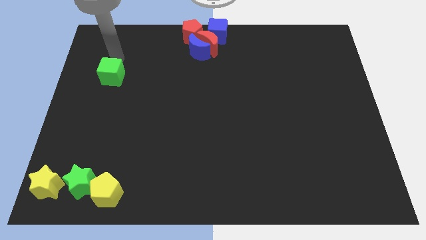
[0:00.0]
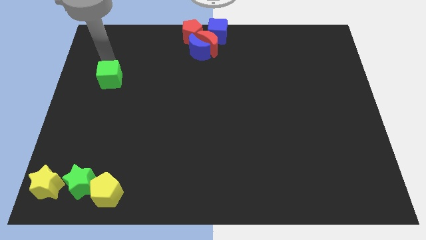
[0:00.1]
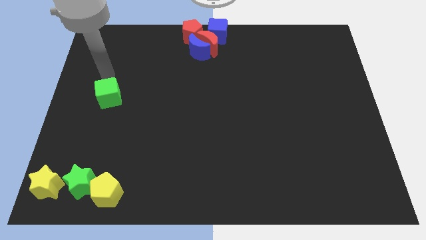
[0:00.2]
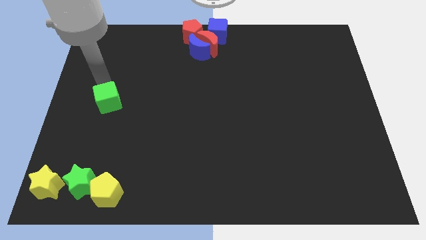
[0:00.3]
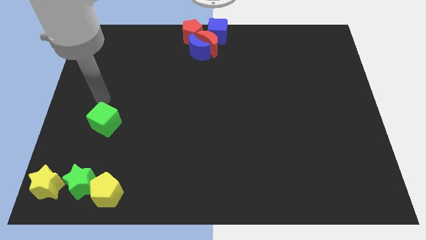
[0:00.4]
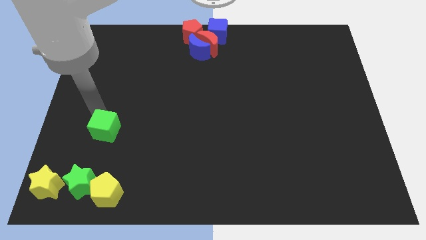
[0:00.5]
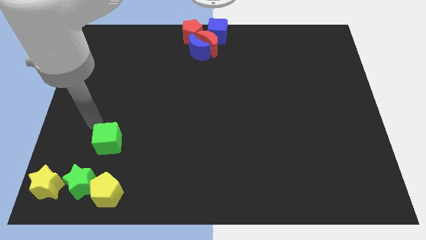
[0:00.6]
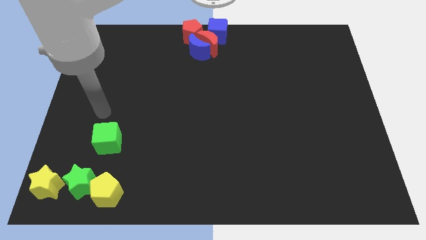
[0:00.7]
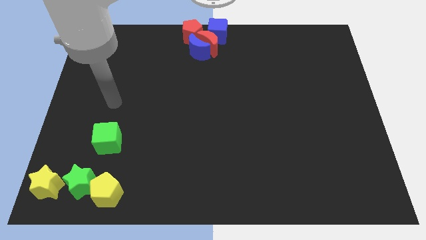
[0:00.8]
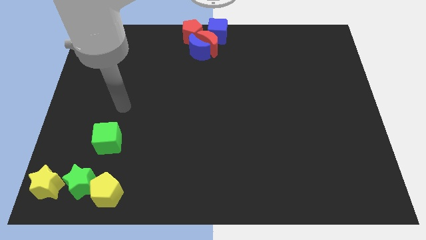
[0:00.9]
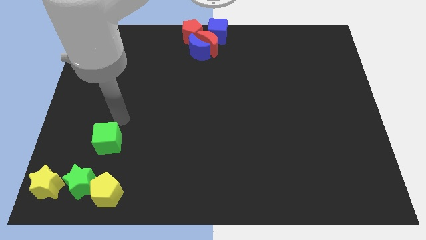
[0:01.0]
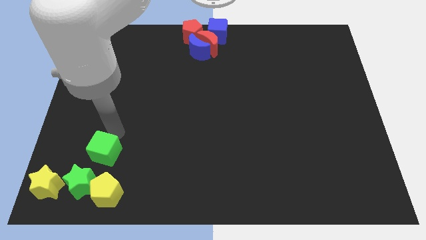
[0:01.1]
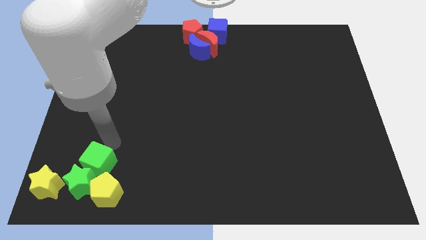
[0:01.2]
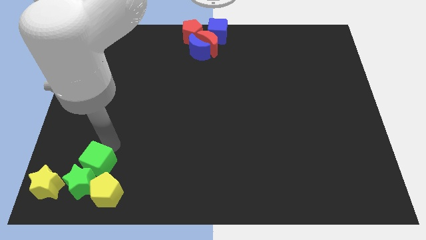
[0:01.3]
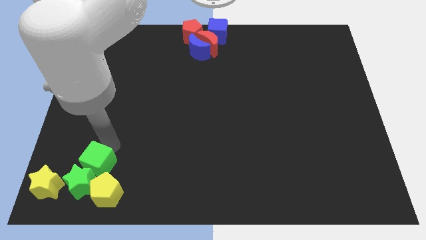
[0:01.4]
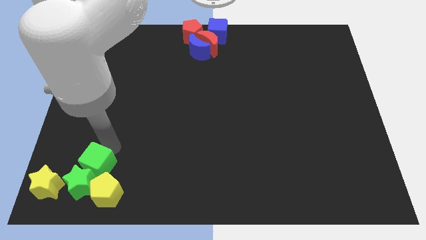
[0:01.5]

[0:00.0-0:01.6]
move the green cube towards the group of blocks

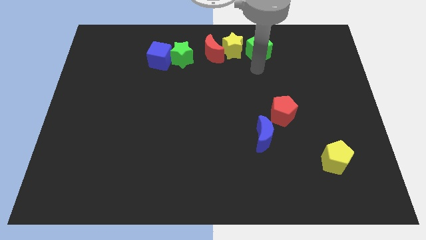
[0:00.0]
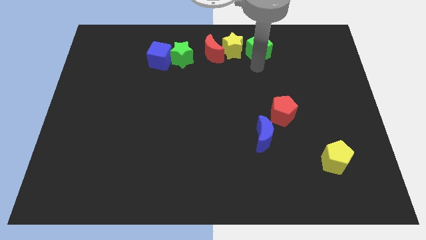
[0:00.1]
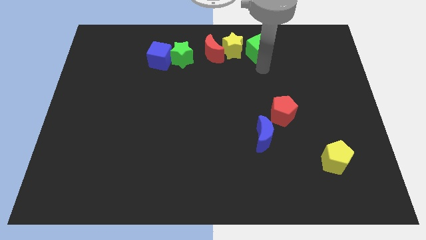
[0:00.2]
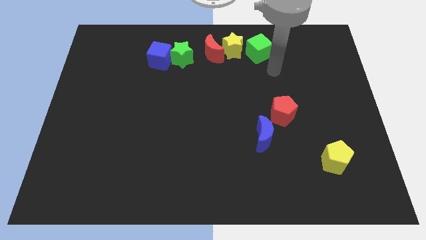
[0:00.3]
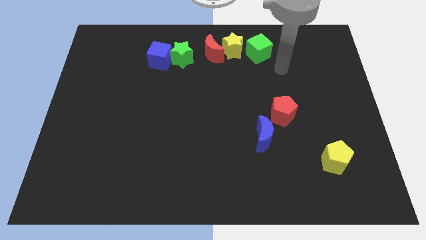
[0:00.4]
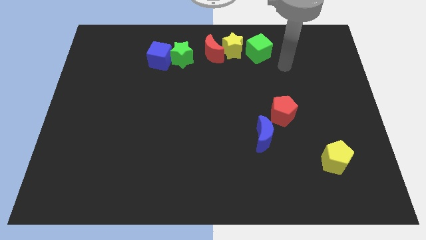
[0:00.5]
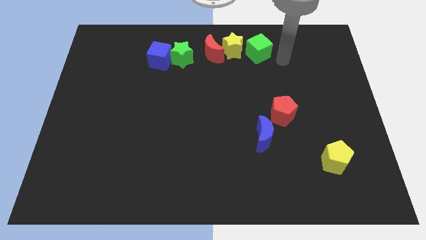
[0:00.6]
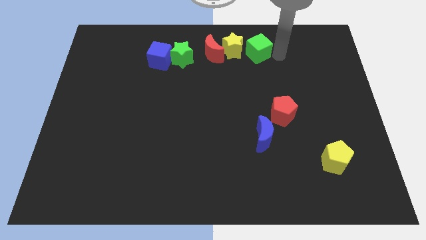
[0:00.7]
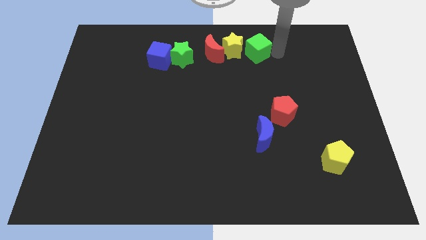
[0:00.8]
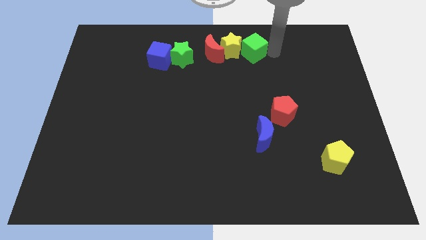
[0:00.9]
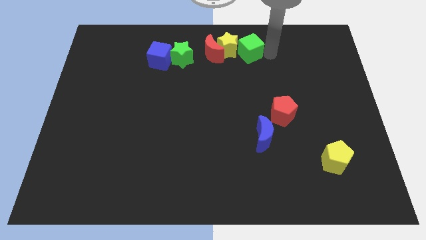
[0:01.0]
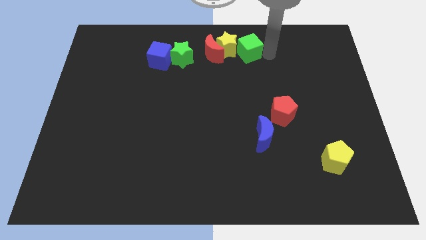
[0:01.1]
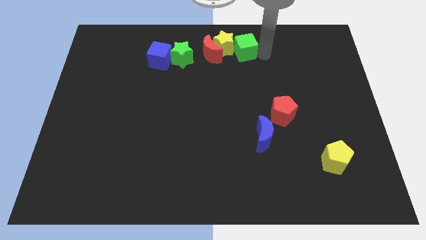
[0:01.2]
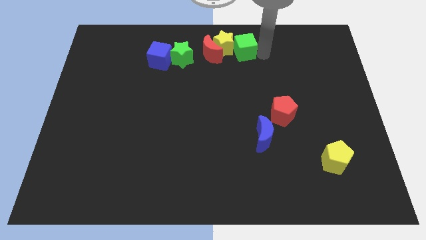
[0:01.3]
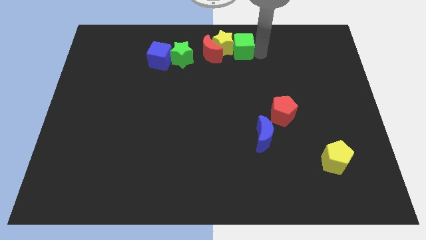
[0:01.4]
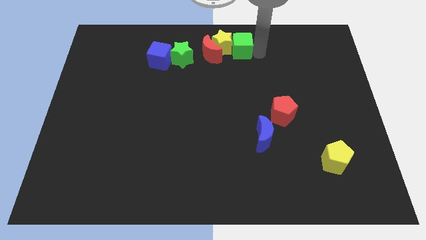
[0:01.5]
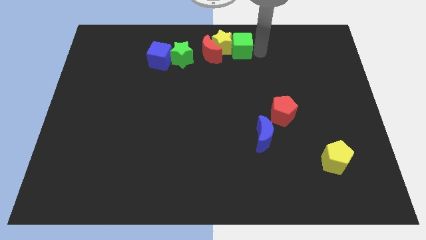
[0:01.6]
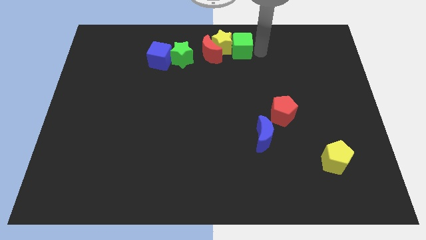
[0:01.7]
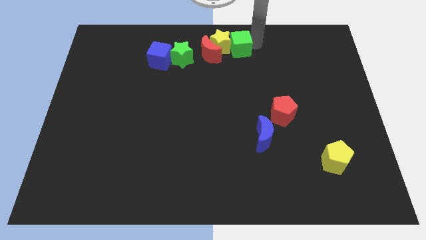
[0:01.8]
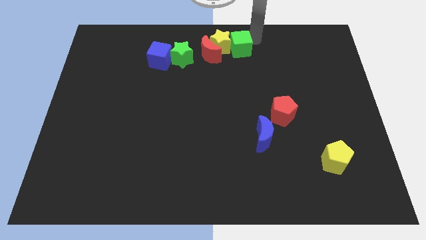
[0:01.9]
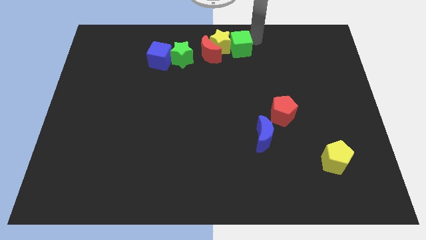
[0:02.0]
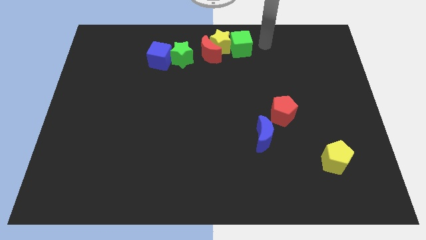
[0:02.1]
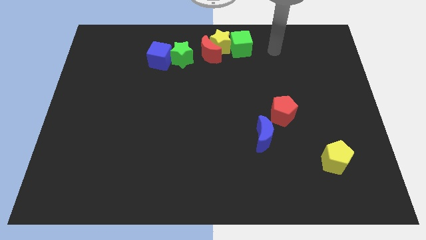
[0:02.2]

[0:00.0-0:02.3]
push the green cube into the yellow star to the right

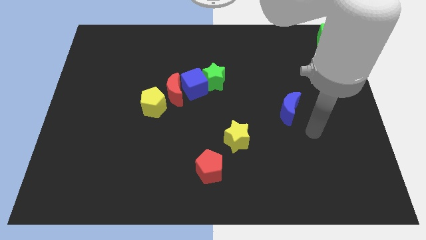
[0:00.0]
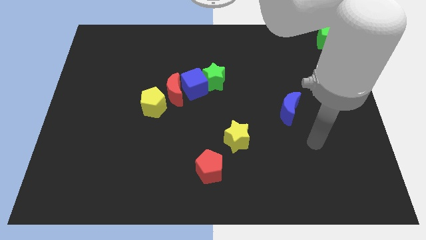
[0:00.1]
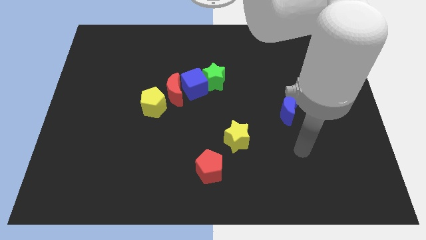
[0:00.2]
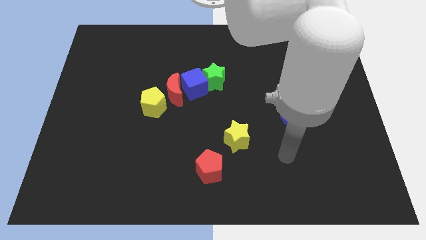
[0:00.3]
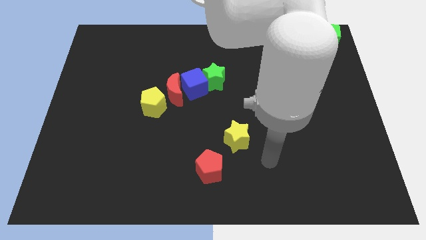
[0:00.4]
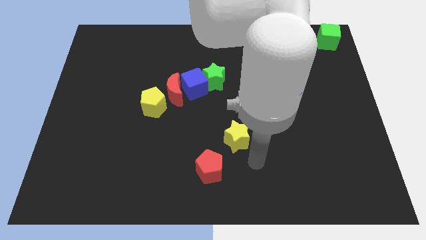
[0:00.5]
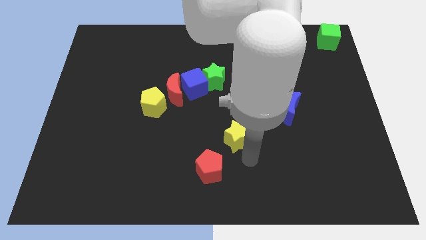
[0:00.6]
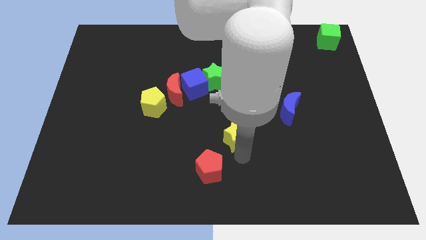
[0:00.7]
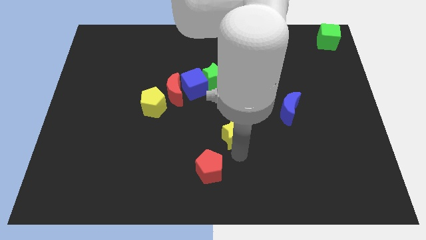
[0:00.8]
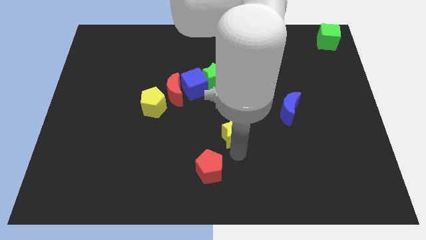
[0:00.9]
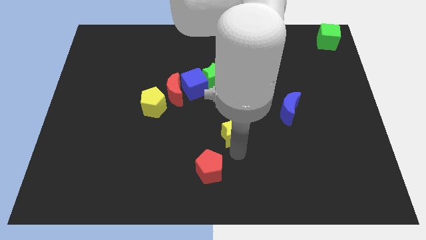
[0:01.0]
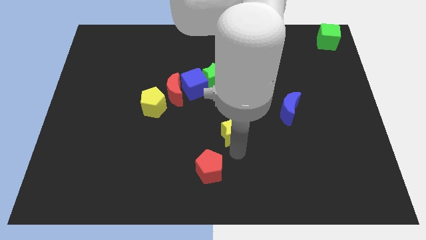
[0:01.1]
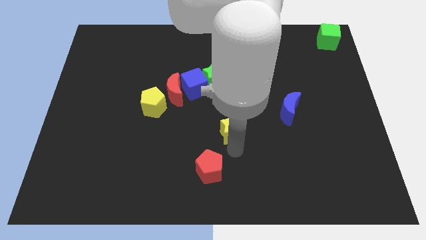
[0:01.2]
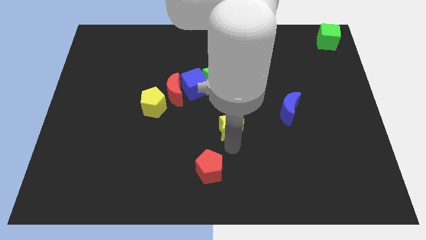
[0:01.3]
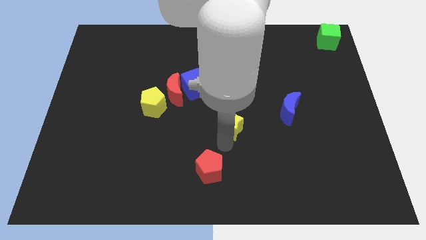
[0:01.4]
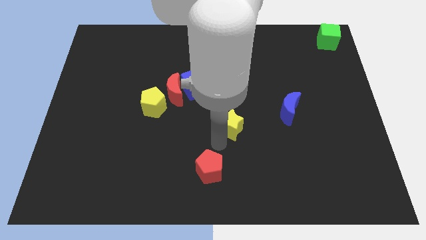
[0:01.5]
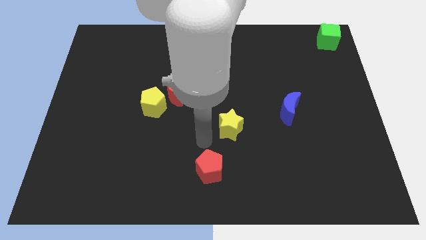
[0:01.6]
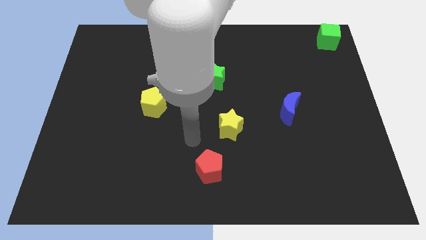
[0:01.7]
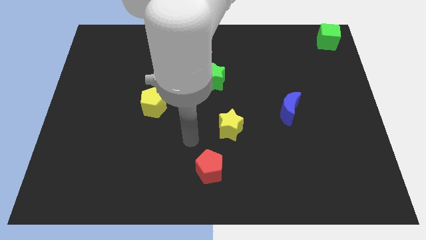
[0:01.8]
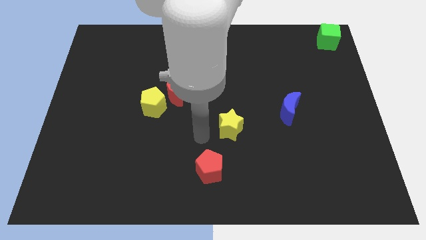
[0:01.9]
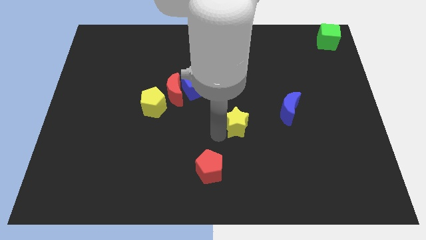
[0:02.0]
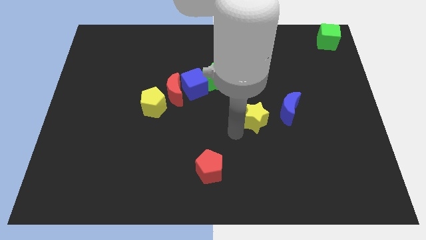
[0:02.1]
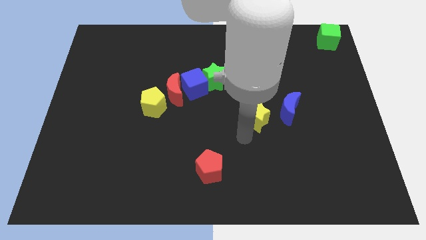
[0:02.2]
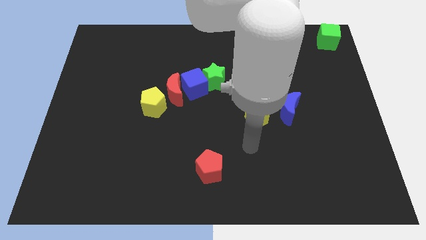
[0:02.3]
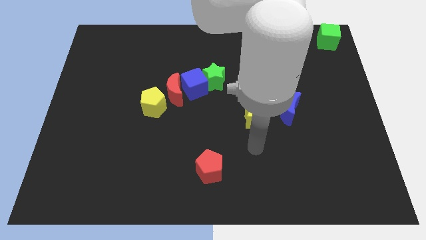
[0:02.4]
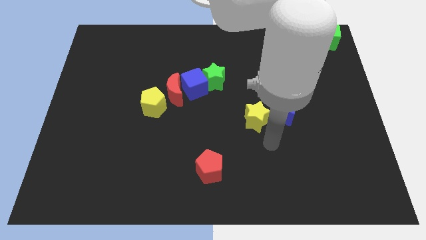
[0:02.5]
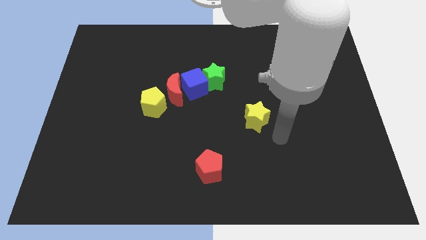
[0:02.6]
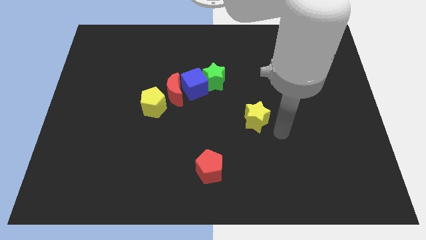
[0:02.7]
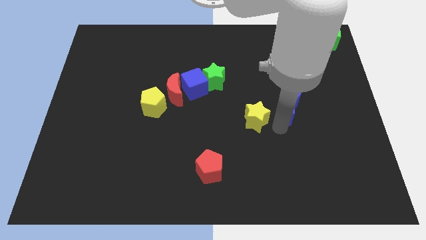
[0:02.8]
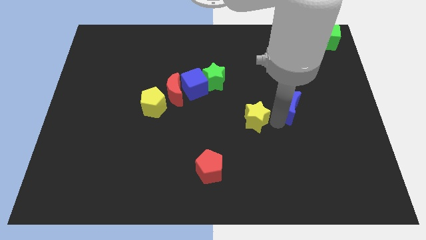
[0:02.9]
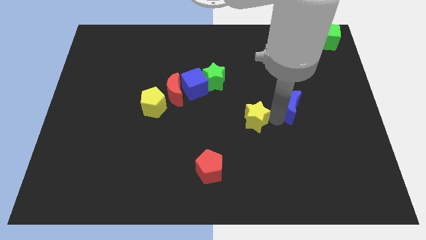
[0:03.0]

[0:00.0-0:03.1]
move the yellow star to the left of the blue crescent

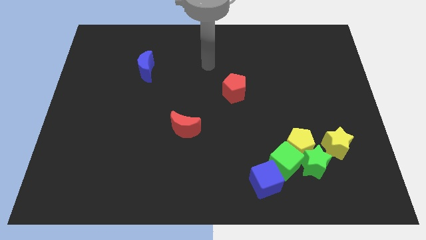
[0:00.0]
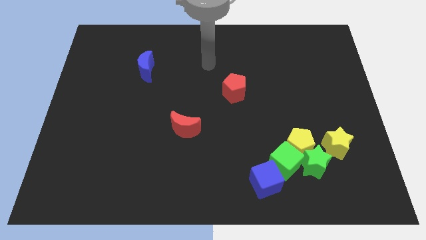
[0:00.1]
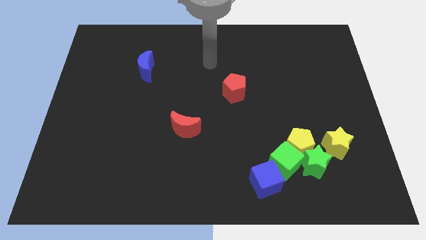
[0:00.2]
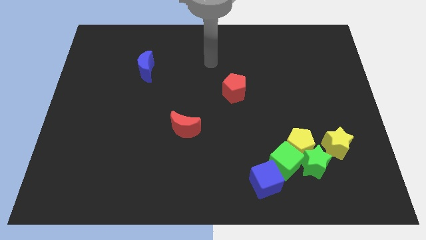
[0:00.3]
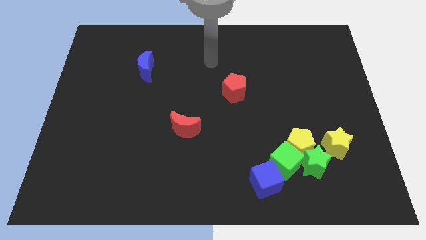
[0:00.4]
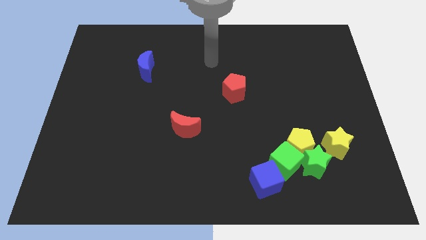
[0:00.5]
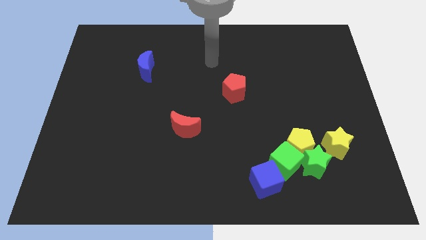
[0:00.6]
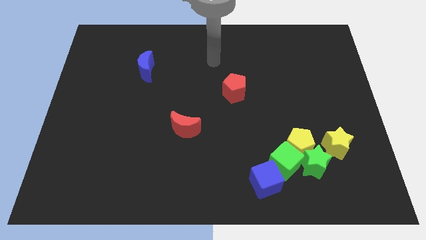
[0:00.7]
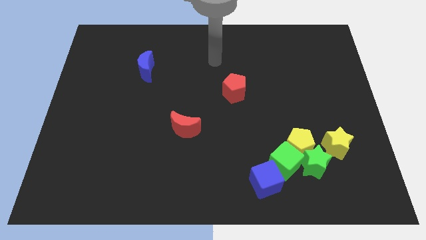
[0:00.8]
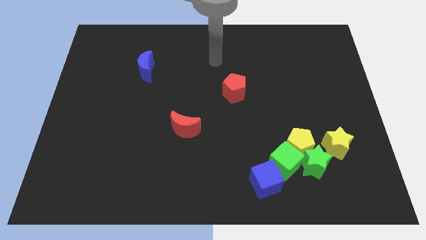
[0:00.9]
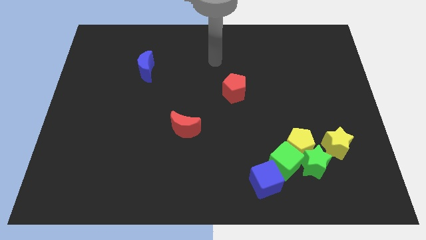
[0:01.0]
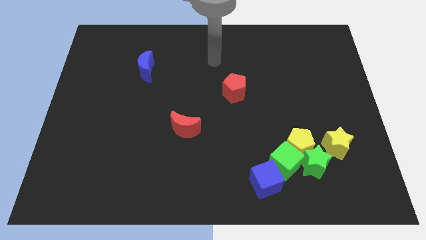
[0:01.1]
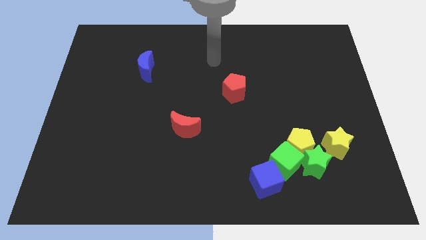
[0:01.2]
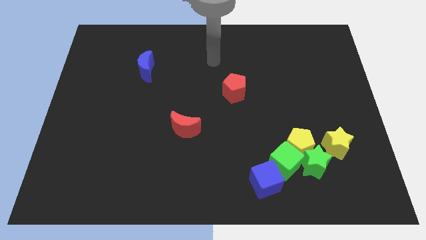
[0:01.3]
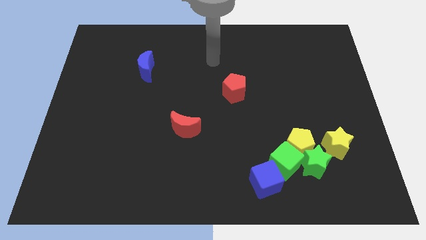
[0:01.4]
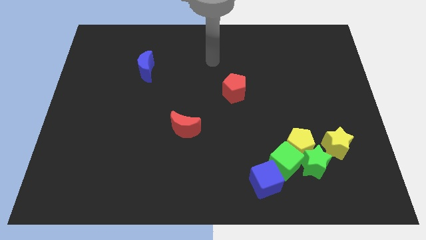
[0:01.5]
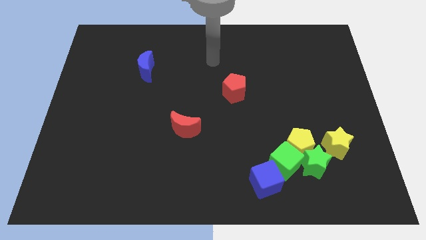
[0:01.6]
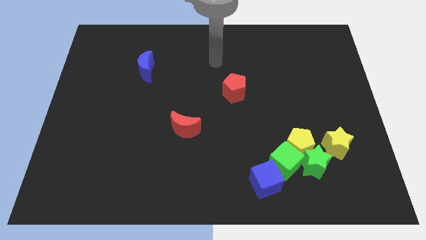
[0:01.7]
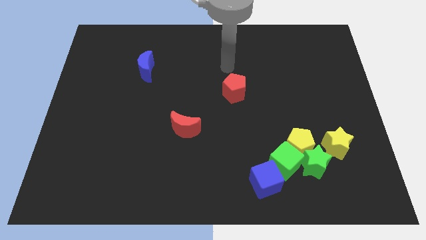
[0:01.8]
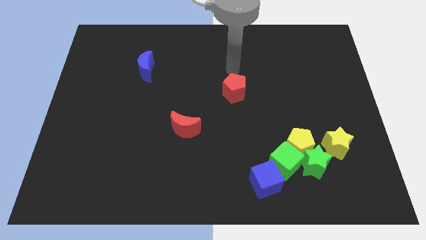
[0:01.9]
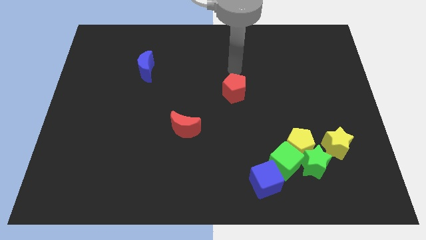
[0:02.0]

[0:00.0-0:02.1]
move your hand towards the top of the red pentagon
